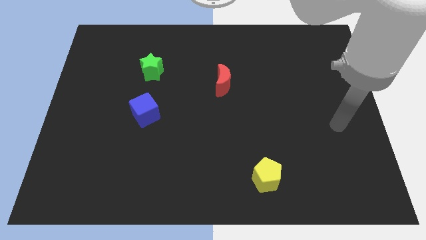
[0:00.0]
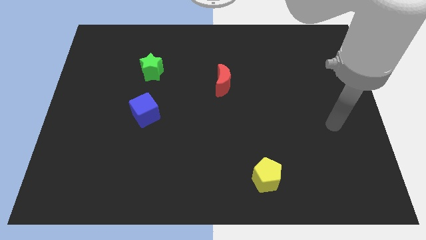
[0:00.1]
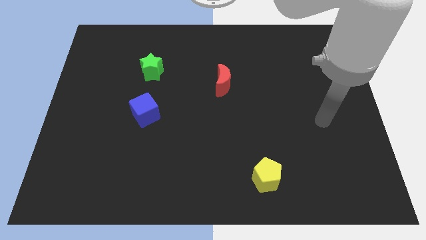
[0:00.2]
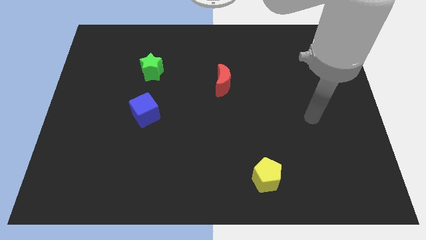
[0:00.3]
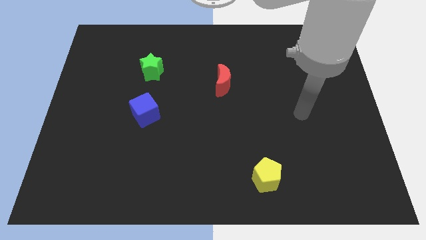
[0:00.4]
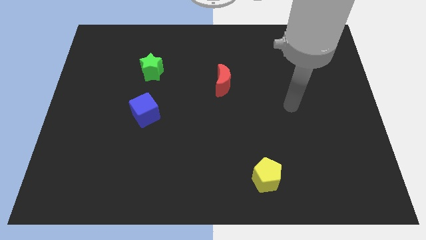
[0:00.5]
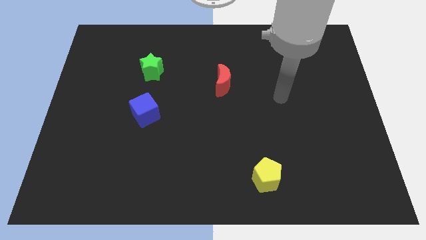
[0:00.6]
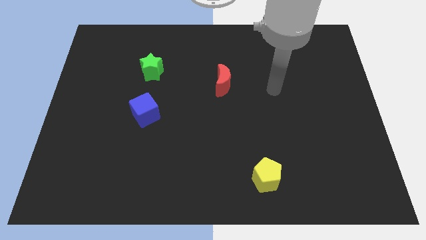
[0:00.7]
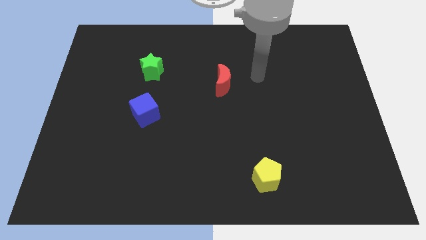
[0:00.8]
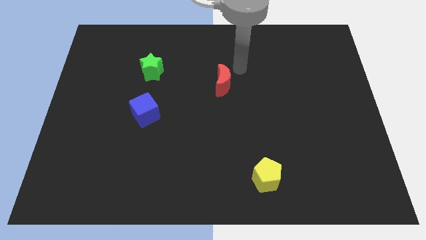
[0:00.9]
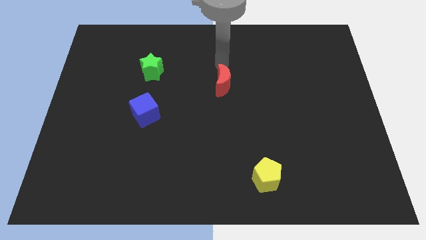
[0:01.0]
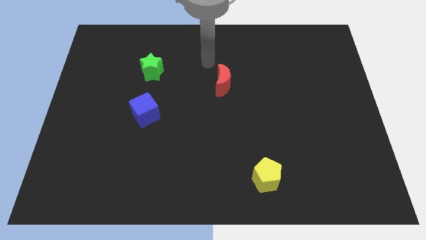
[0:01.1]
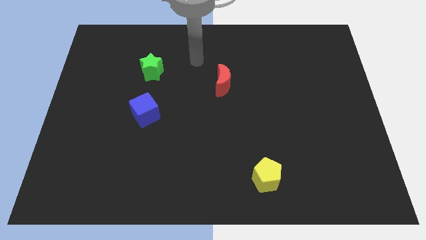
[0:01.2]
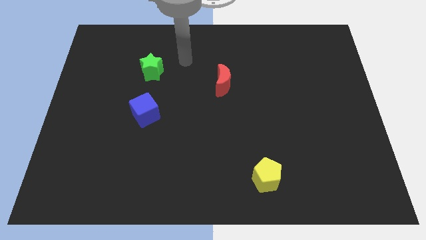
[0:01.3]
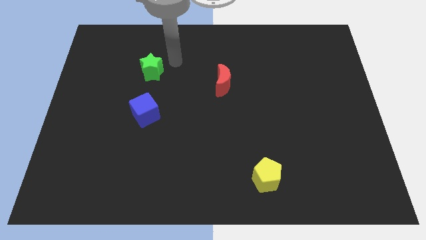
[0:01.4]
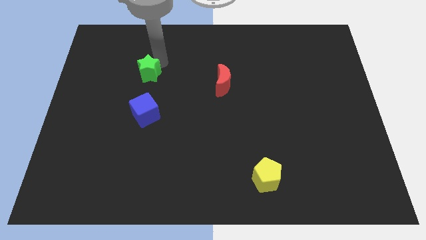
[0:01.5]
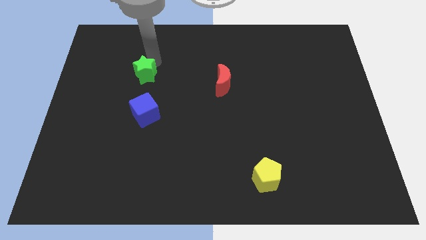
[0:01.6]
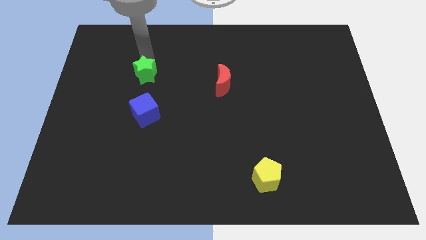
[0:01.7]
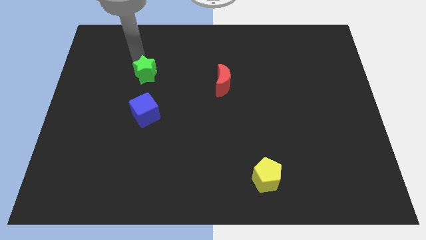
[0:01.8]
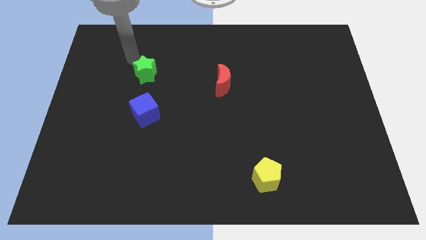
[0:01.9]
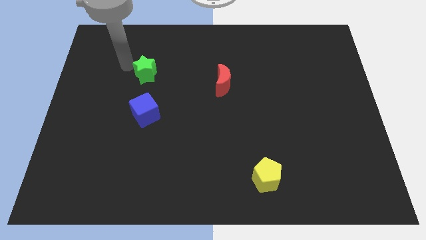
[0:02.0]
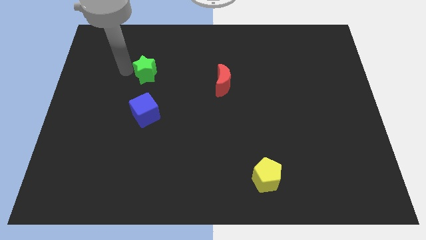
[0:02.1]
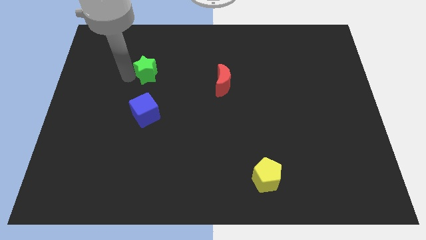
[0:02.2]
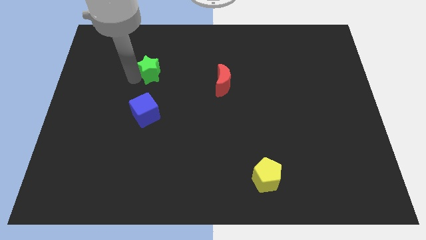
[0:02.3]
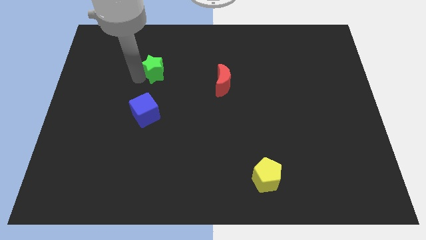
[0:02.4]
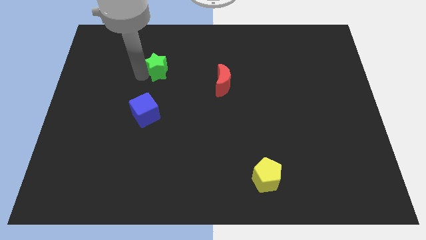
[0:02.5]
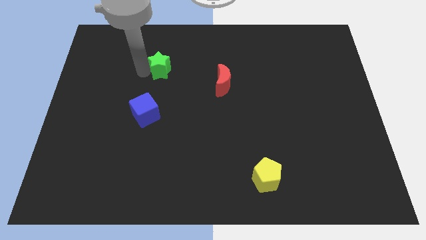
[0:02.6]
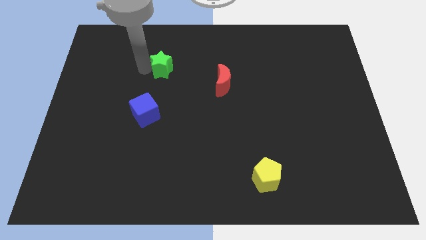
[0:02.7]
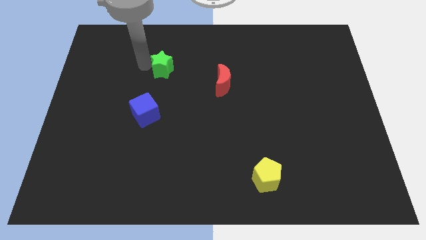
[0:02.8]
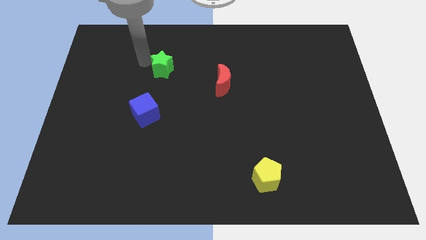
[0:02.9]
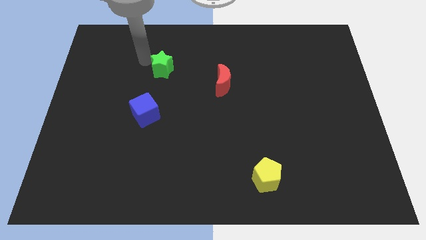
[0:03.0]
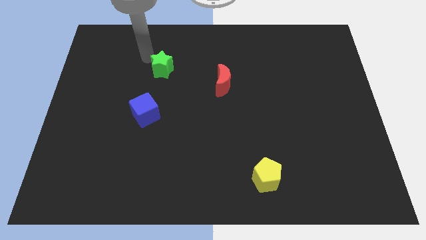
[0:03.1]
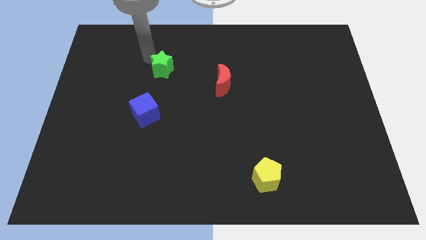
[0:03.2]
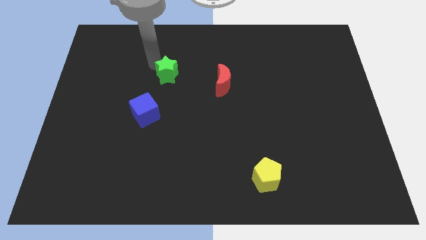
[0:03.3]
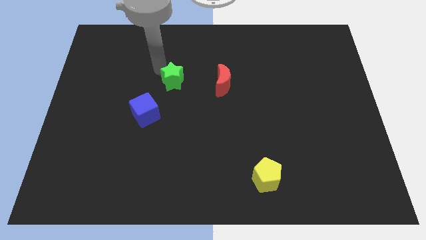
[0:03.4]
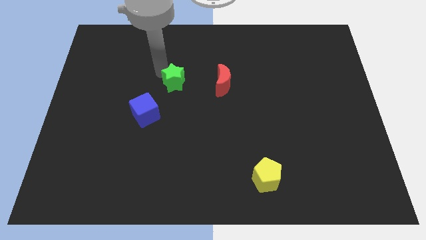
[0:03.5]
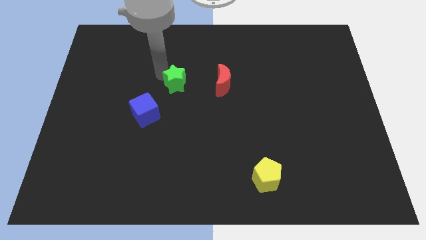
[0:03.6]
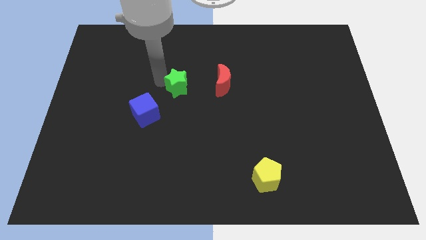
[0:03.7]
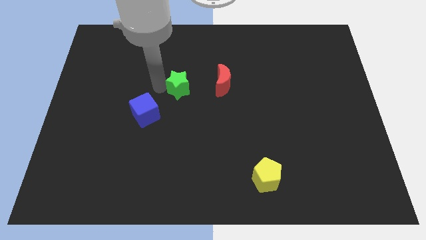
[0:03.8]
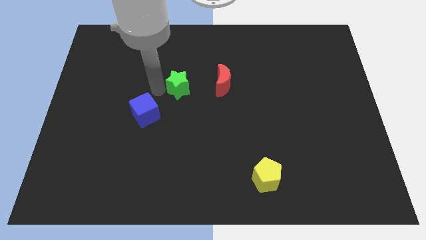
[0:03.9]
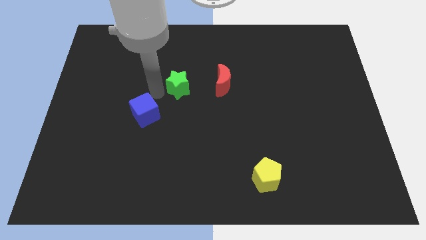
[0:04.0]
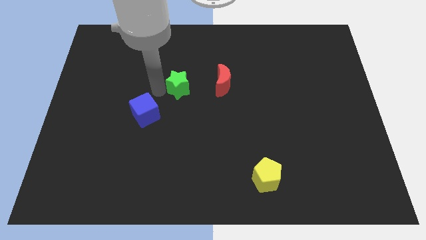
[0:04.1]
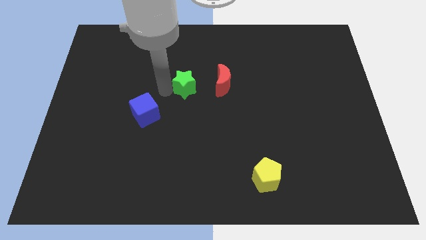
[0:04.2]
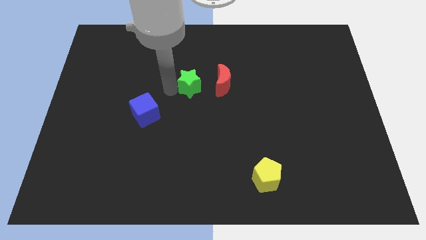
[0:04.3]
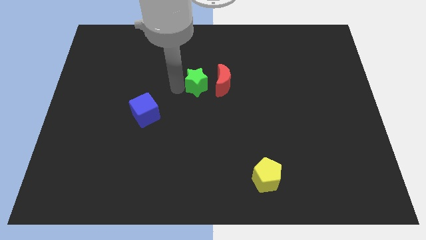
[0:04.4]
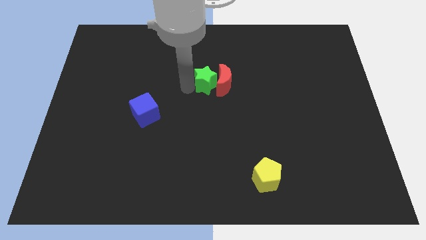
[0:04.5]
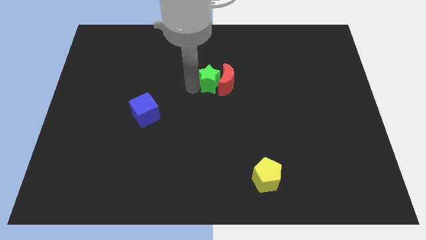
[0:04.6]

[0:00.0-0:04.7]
put the green star next to the red moon

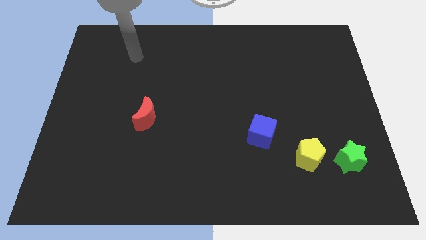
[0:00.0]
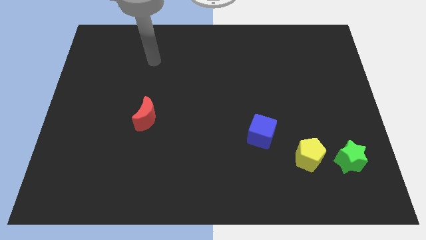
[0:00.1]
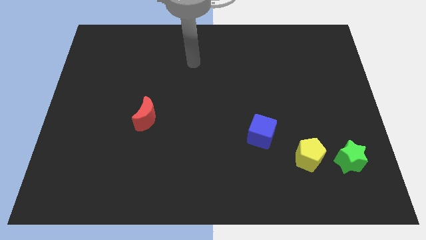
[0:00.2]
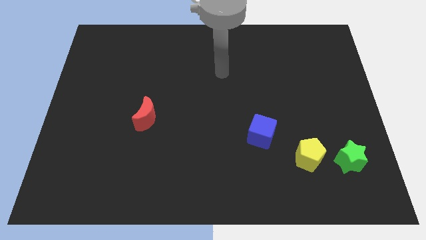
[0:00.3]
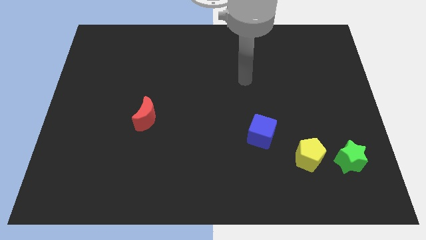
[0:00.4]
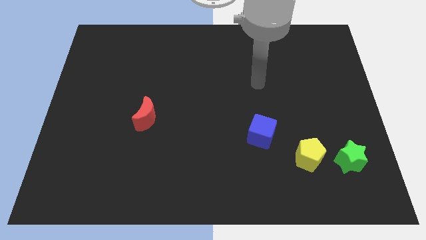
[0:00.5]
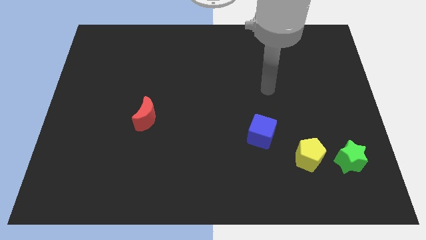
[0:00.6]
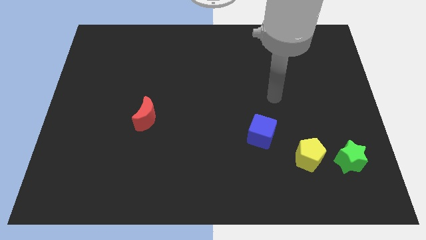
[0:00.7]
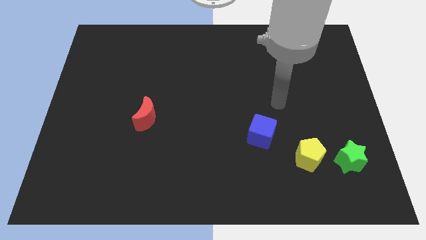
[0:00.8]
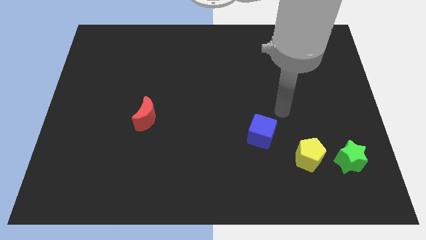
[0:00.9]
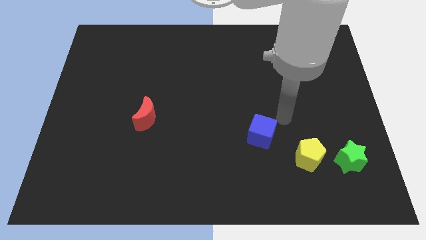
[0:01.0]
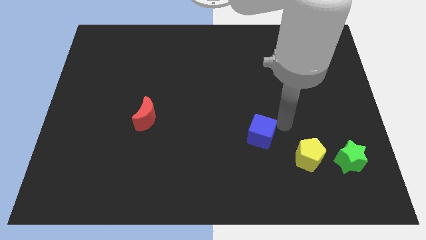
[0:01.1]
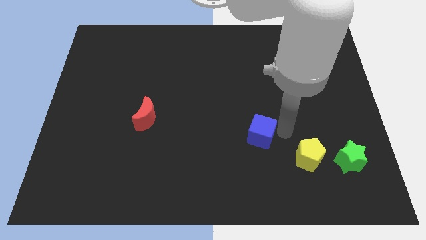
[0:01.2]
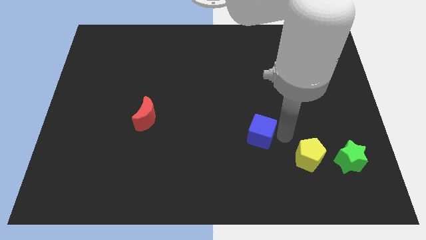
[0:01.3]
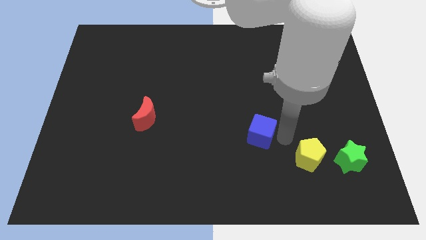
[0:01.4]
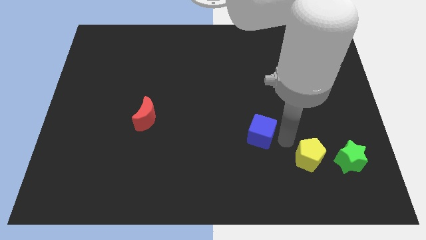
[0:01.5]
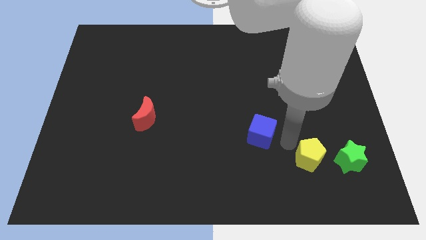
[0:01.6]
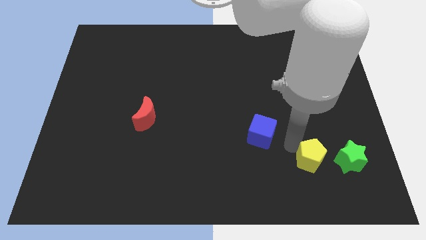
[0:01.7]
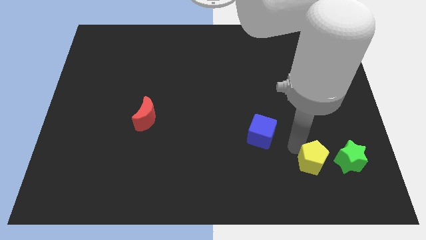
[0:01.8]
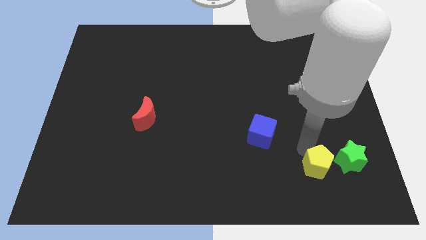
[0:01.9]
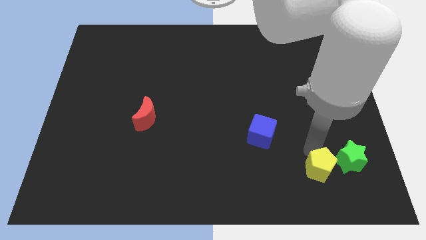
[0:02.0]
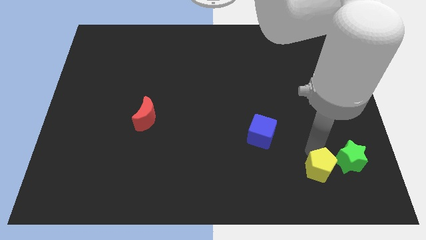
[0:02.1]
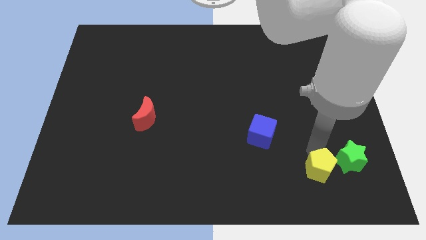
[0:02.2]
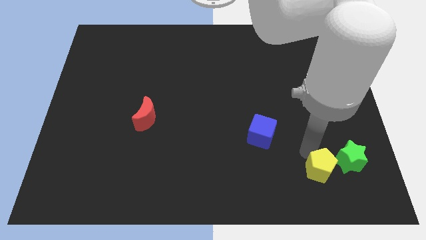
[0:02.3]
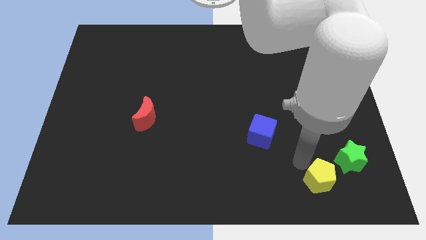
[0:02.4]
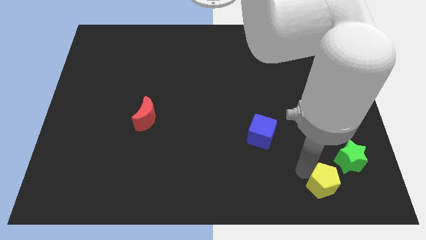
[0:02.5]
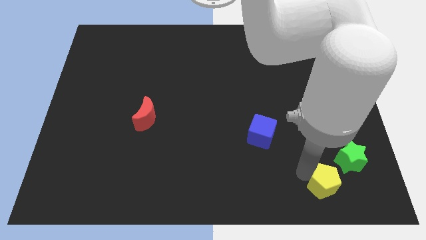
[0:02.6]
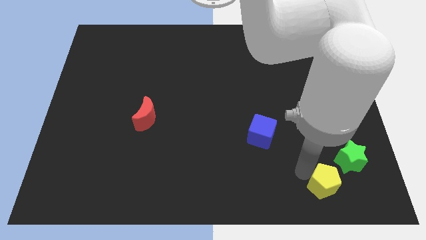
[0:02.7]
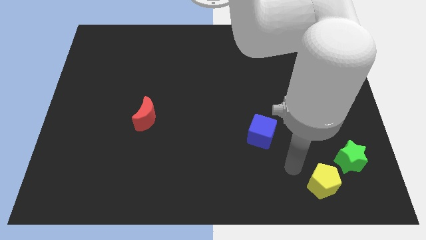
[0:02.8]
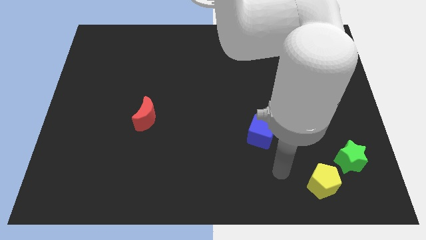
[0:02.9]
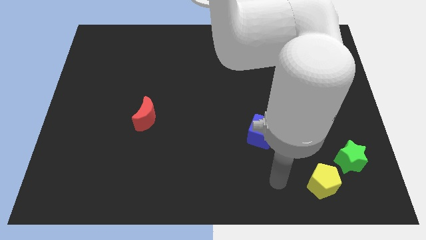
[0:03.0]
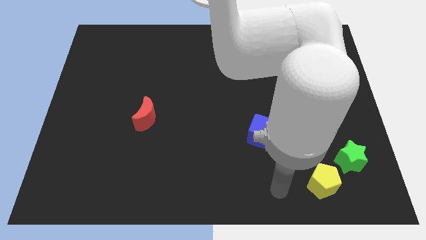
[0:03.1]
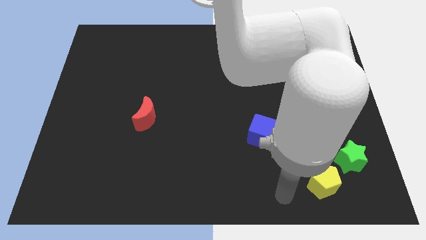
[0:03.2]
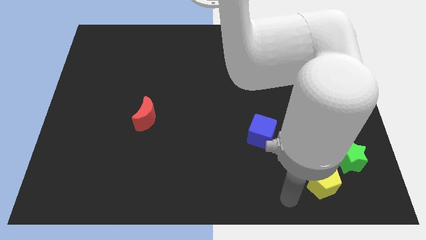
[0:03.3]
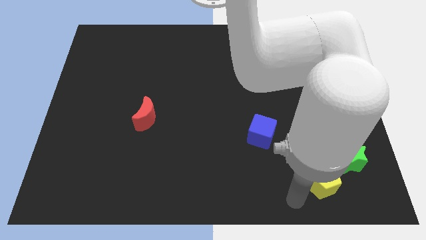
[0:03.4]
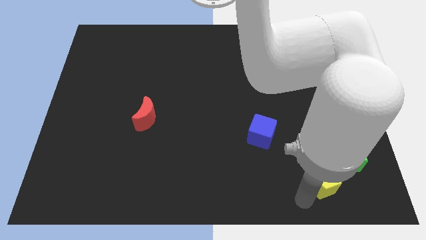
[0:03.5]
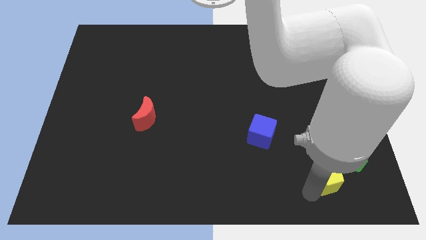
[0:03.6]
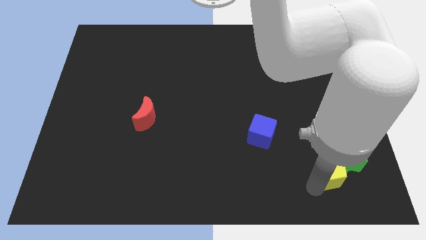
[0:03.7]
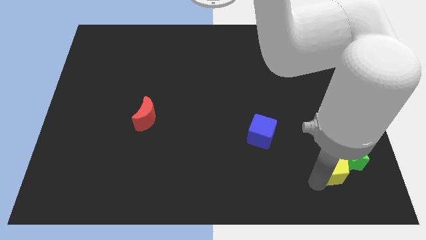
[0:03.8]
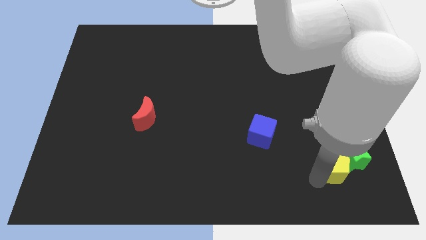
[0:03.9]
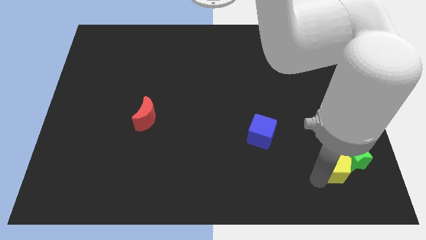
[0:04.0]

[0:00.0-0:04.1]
slide the pentagon next to the star
